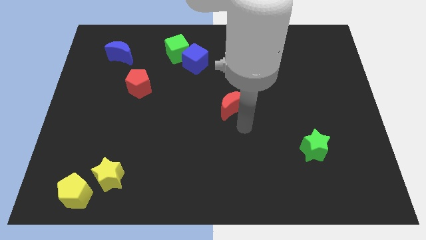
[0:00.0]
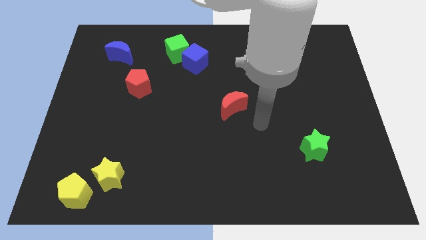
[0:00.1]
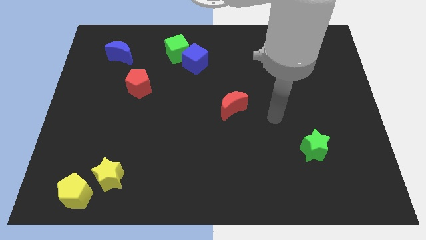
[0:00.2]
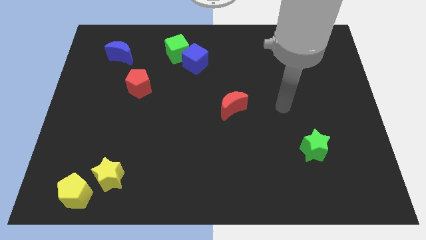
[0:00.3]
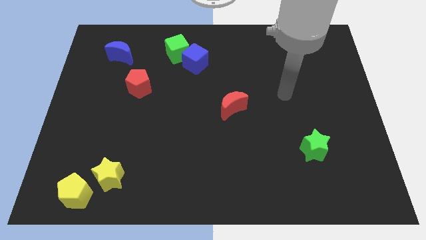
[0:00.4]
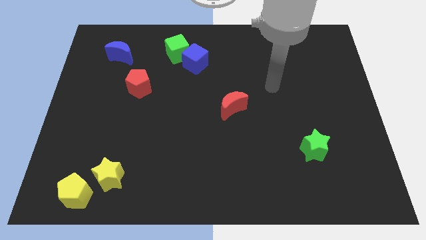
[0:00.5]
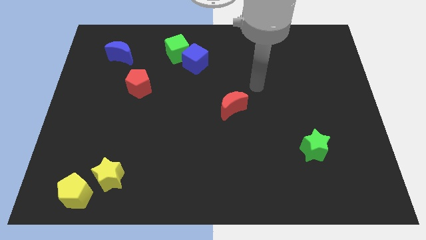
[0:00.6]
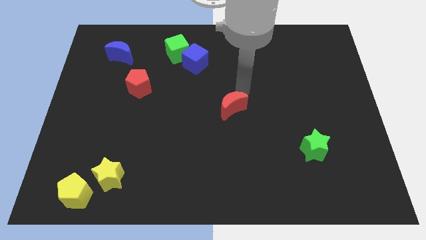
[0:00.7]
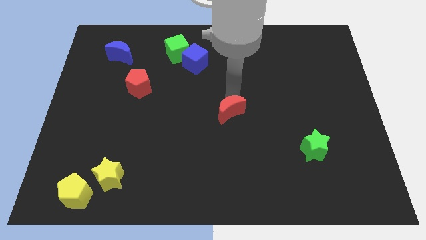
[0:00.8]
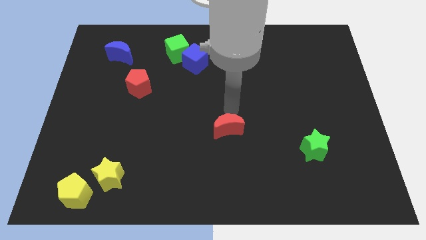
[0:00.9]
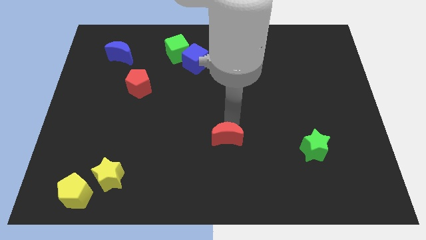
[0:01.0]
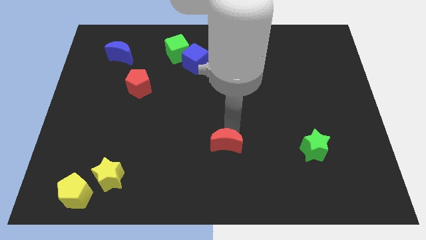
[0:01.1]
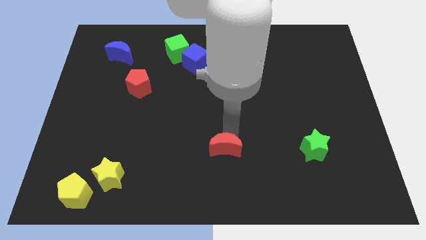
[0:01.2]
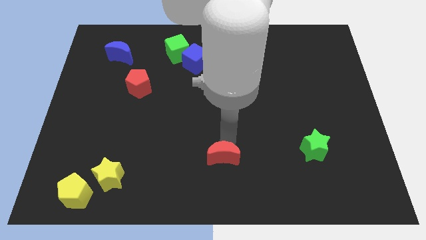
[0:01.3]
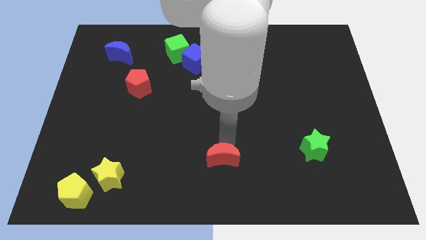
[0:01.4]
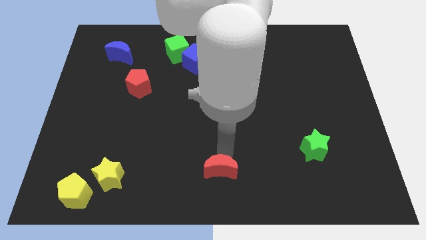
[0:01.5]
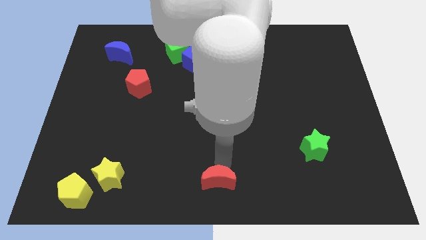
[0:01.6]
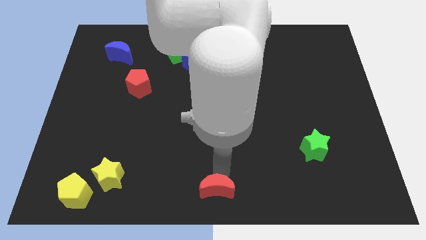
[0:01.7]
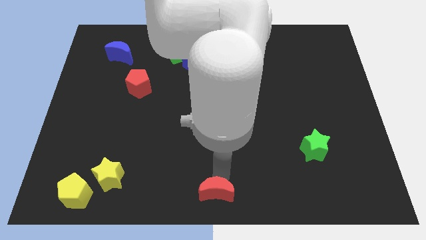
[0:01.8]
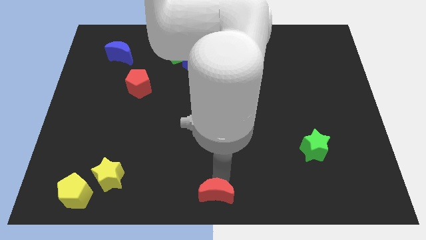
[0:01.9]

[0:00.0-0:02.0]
push the red moon to the bottom center of the board

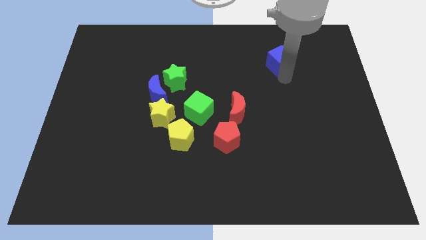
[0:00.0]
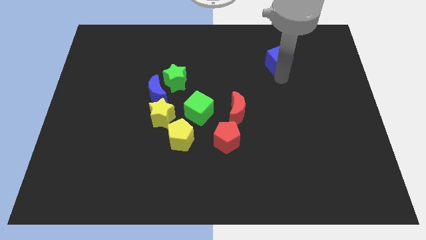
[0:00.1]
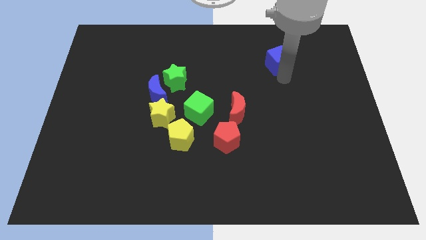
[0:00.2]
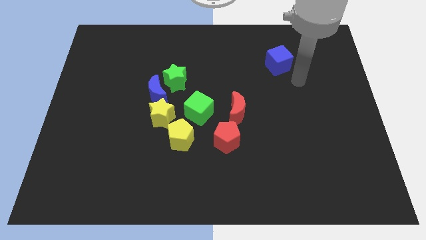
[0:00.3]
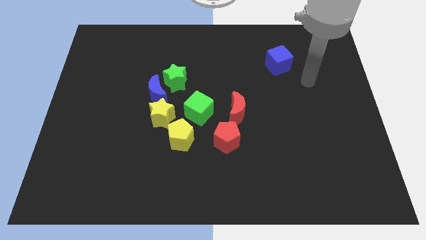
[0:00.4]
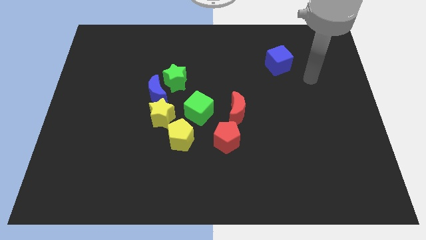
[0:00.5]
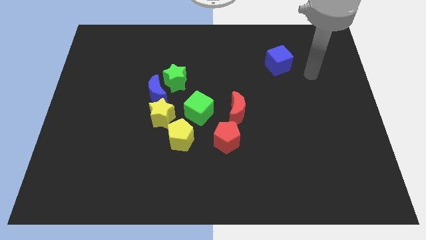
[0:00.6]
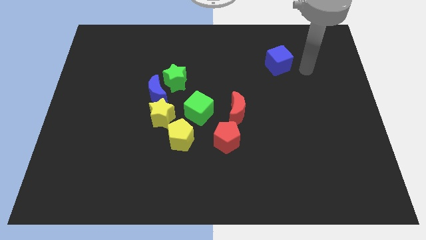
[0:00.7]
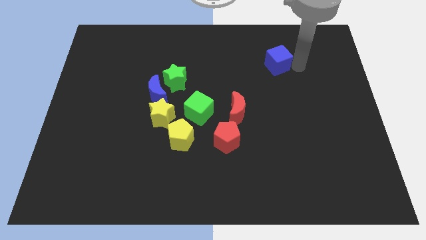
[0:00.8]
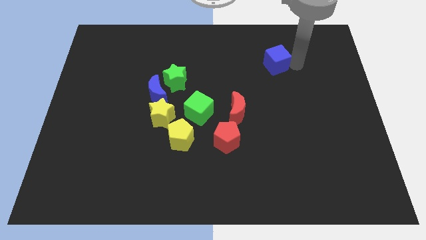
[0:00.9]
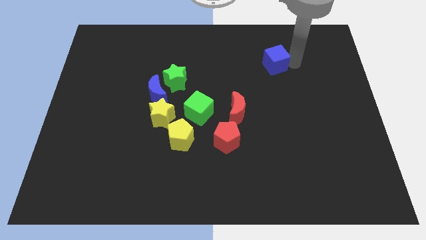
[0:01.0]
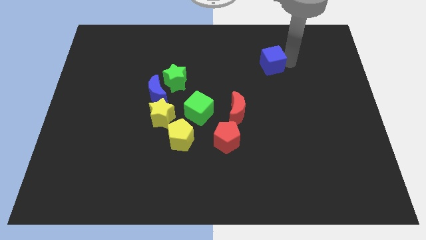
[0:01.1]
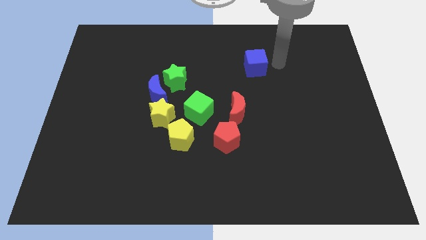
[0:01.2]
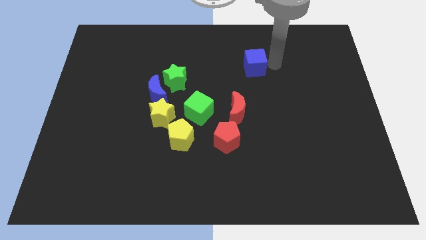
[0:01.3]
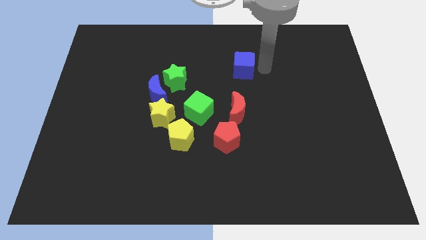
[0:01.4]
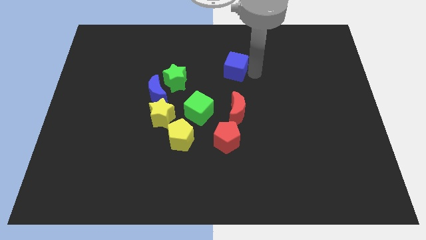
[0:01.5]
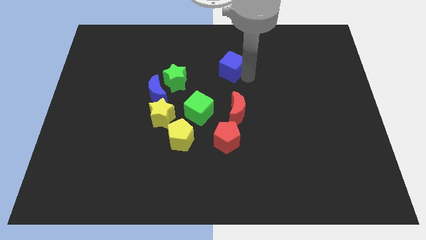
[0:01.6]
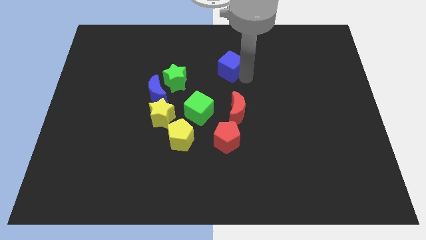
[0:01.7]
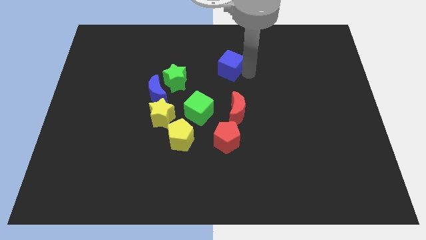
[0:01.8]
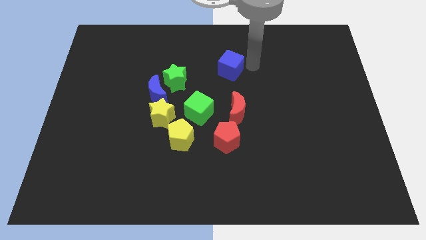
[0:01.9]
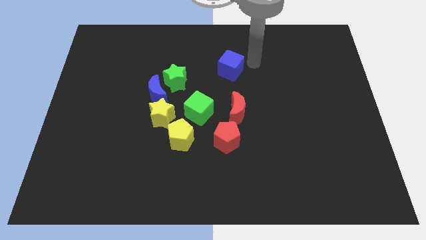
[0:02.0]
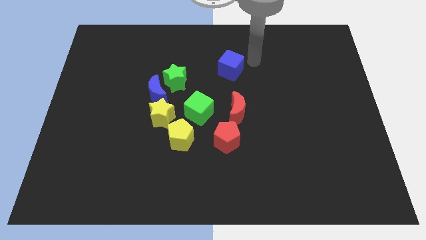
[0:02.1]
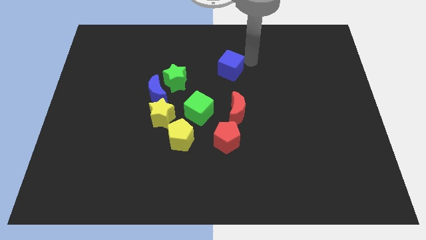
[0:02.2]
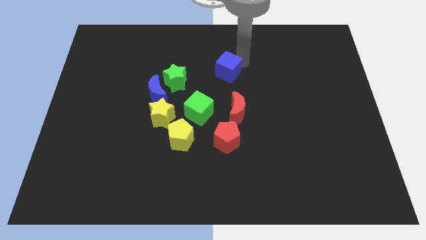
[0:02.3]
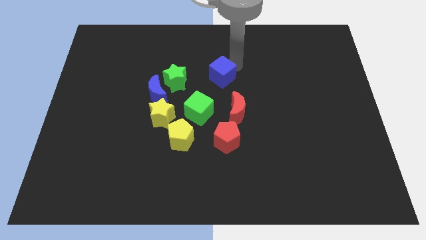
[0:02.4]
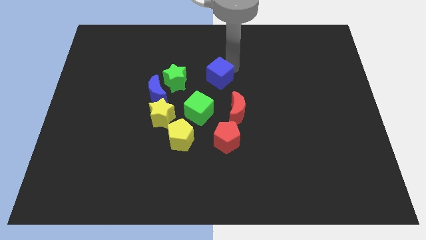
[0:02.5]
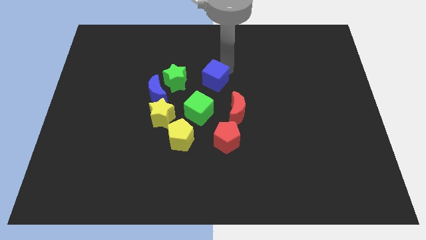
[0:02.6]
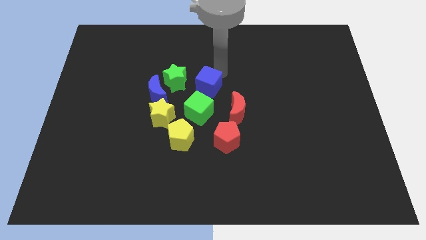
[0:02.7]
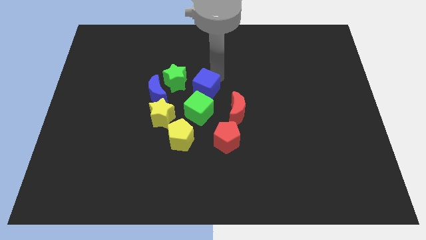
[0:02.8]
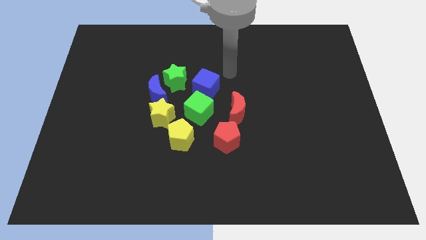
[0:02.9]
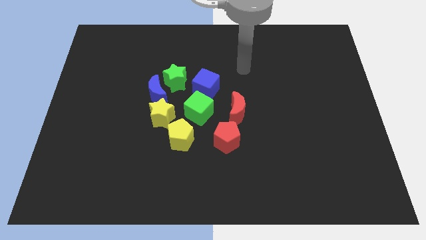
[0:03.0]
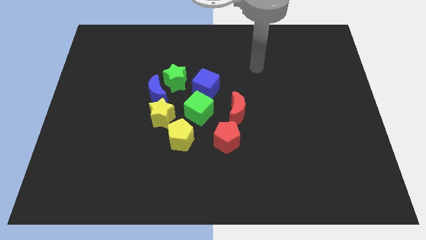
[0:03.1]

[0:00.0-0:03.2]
move the blue cube above the green cube

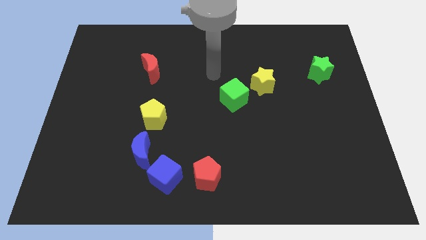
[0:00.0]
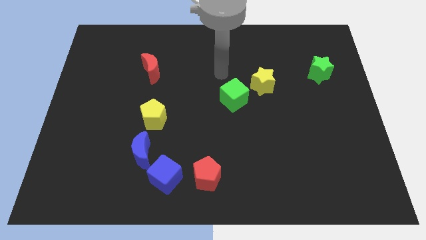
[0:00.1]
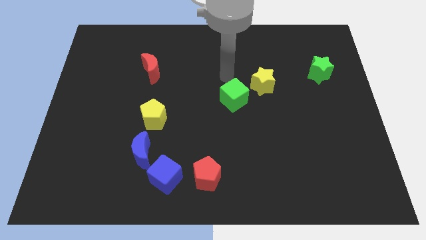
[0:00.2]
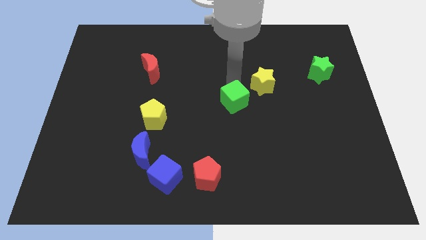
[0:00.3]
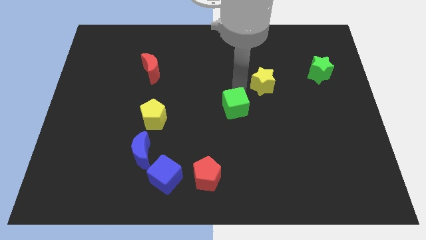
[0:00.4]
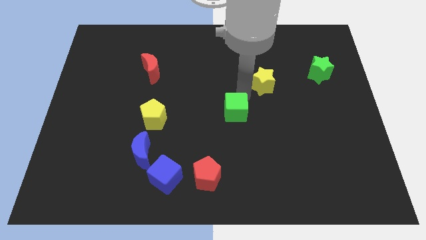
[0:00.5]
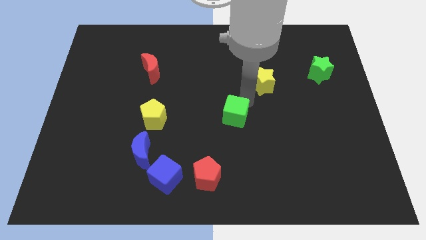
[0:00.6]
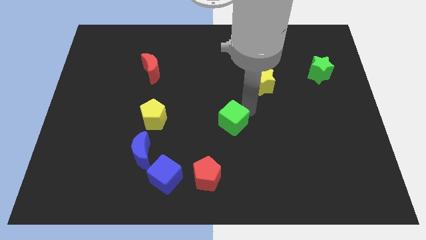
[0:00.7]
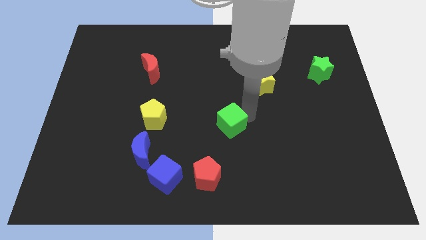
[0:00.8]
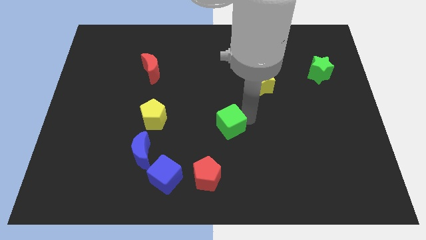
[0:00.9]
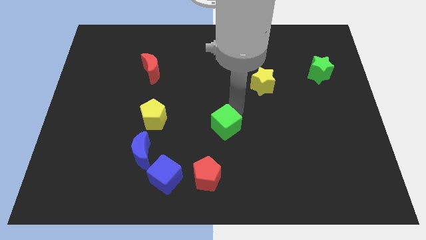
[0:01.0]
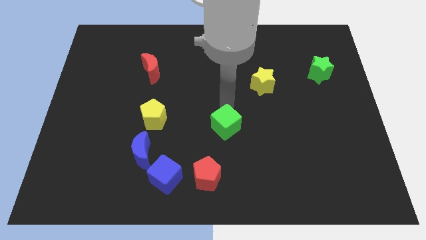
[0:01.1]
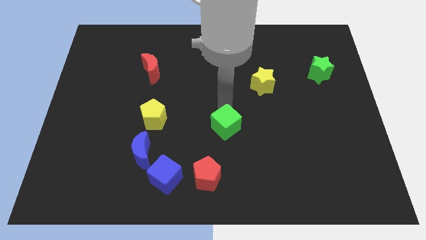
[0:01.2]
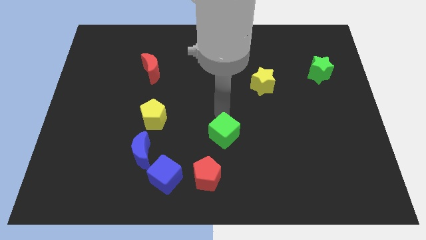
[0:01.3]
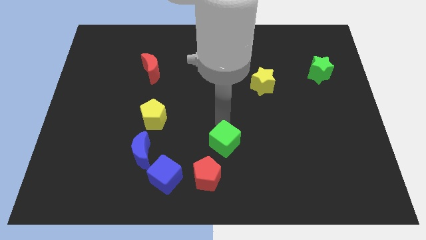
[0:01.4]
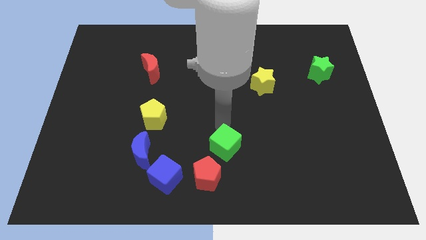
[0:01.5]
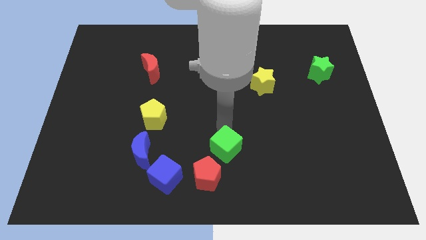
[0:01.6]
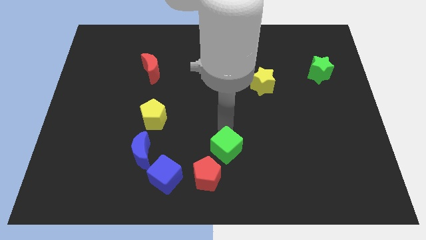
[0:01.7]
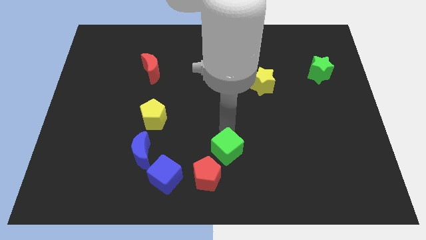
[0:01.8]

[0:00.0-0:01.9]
push the green cube slightly downward

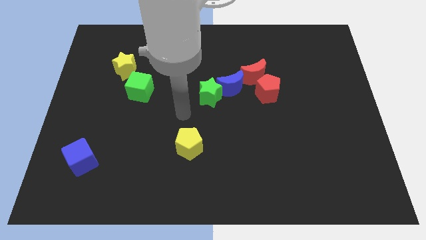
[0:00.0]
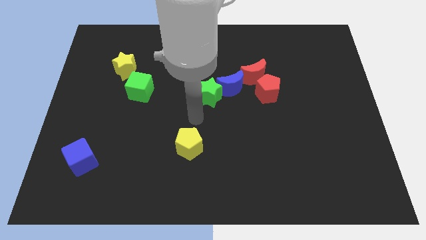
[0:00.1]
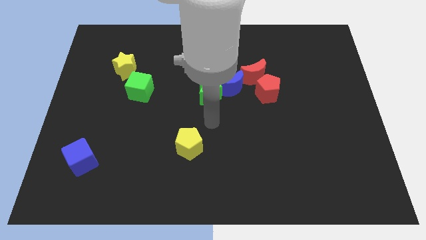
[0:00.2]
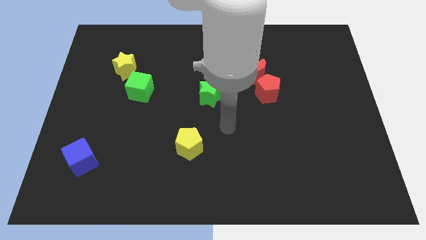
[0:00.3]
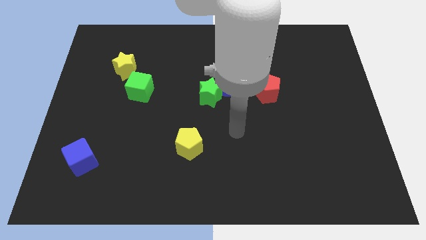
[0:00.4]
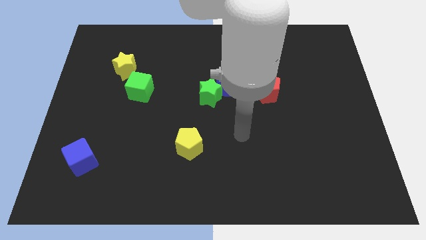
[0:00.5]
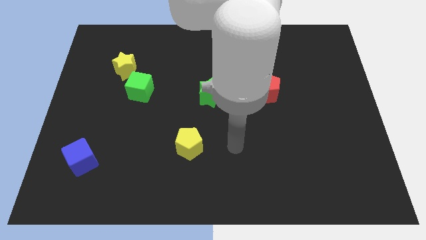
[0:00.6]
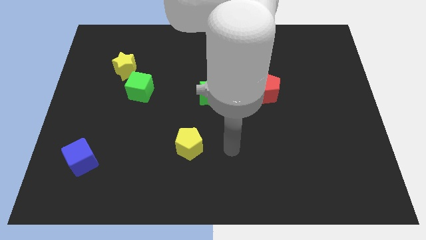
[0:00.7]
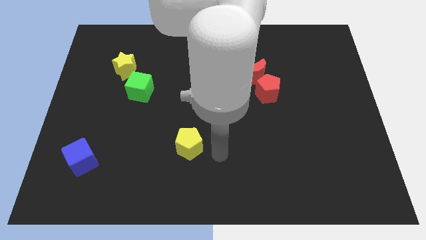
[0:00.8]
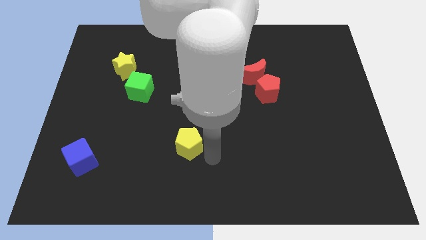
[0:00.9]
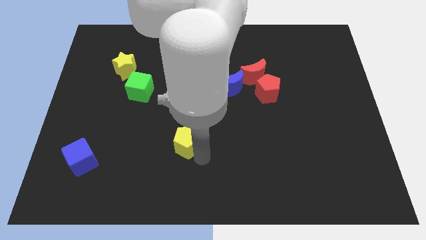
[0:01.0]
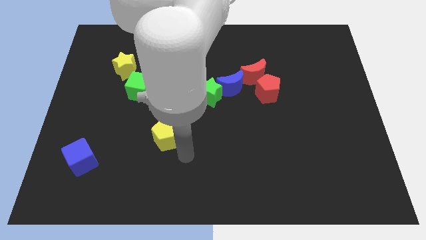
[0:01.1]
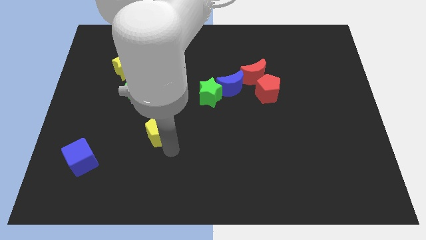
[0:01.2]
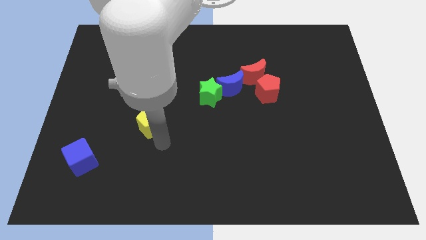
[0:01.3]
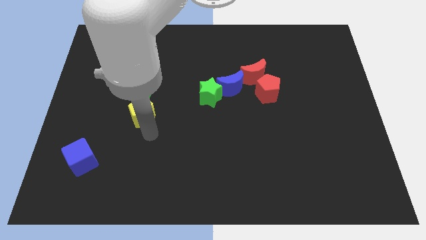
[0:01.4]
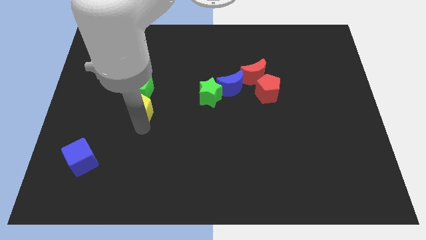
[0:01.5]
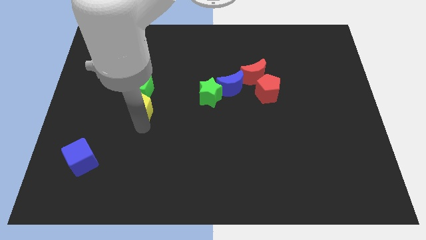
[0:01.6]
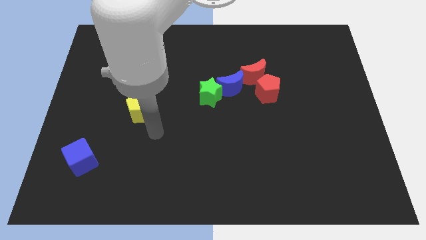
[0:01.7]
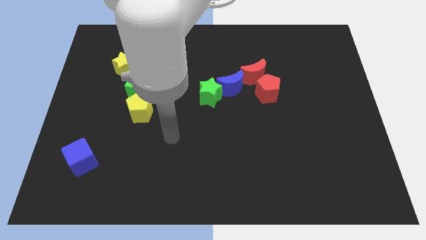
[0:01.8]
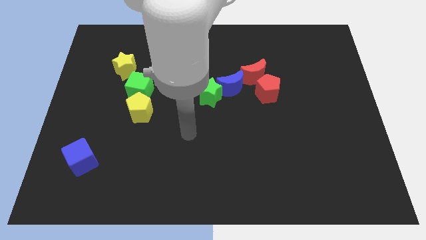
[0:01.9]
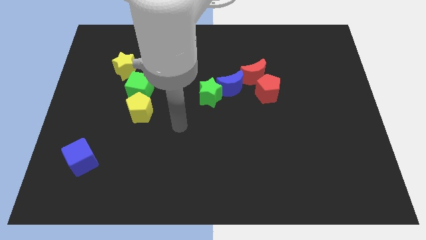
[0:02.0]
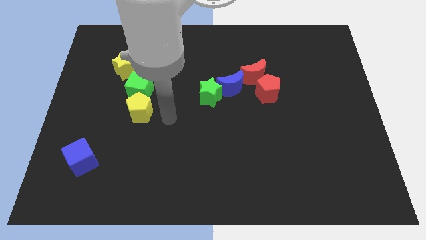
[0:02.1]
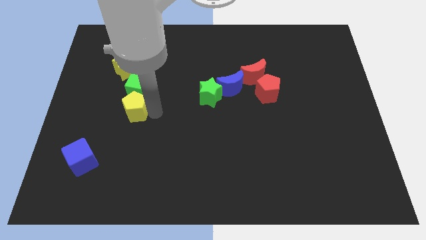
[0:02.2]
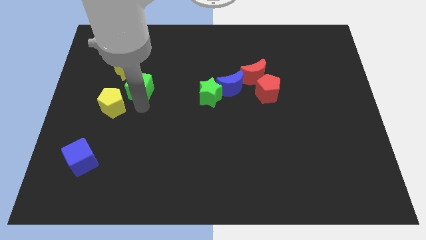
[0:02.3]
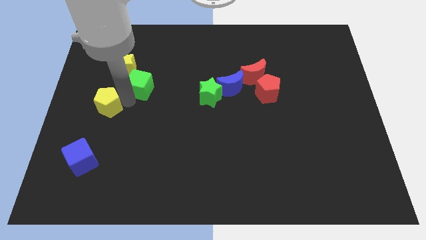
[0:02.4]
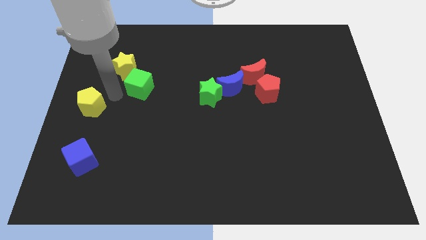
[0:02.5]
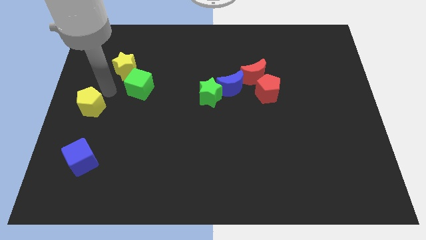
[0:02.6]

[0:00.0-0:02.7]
push the yellow pentagon towards the left center of the board
